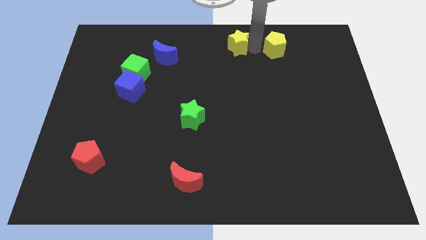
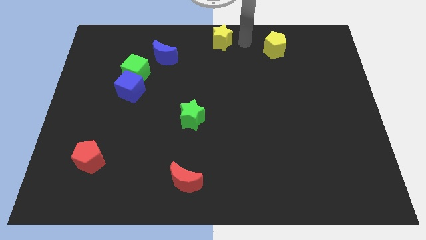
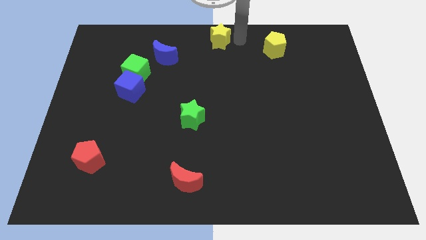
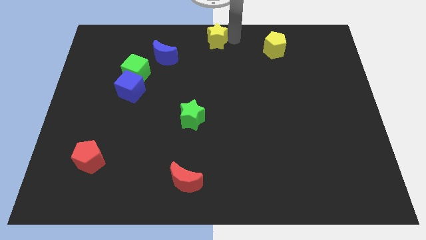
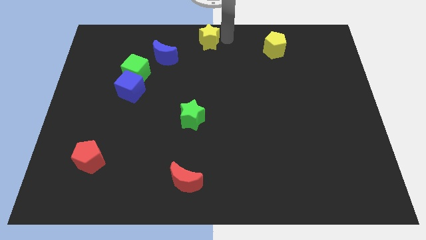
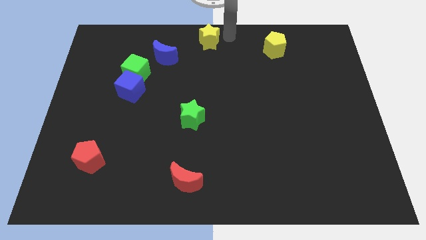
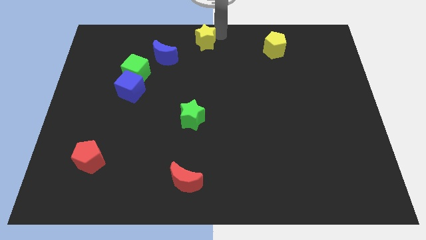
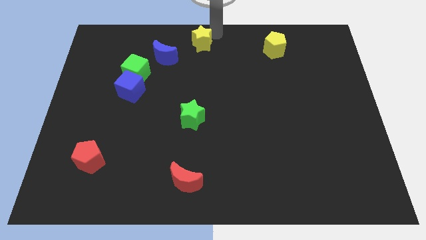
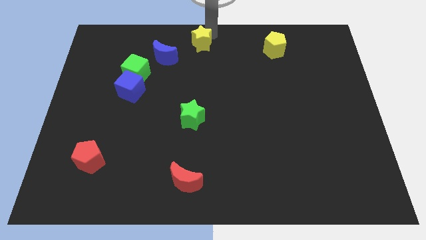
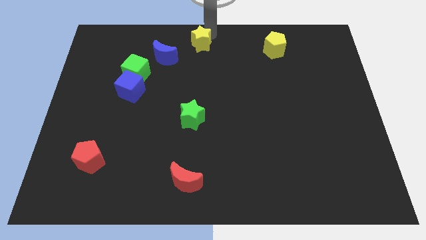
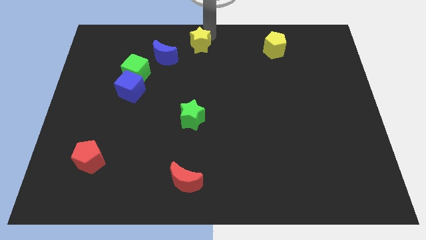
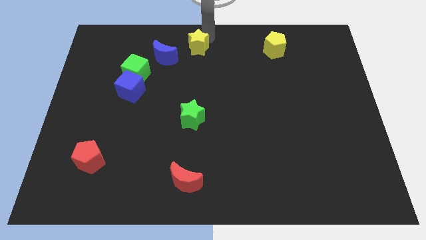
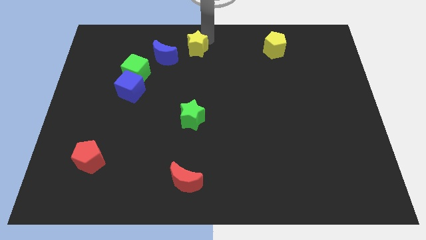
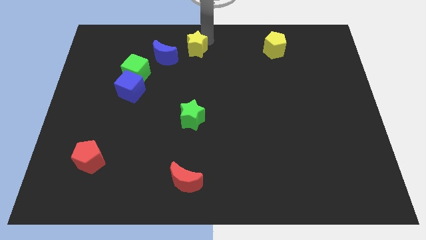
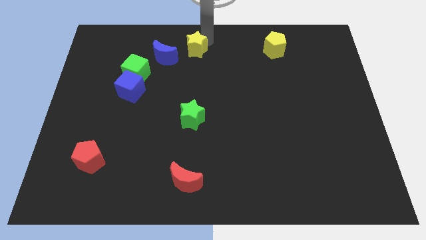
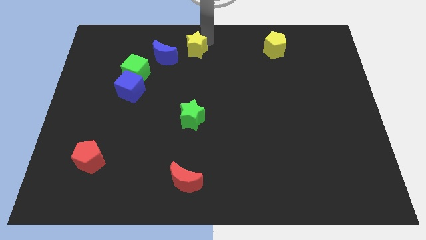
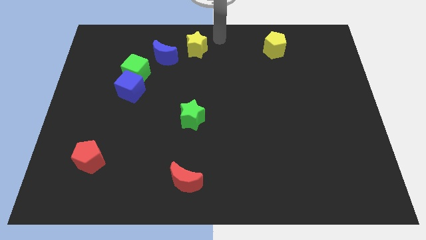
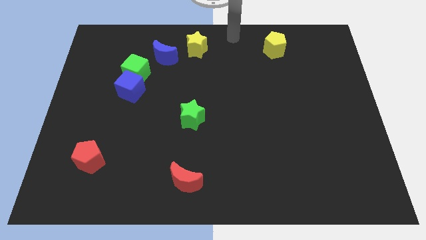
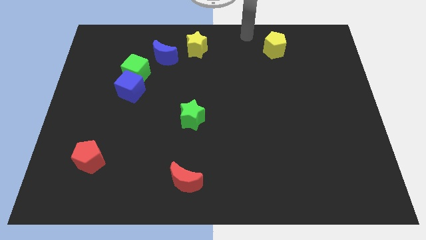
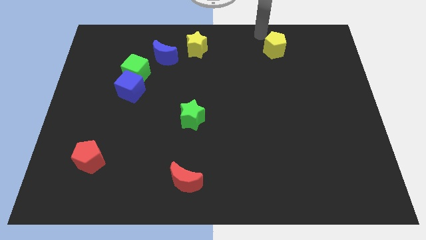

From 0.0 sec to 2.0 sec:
put the yellow star vertically above the green star

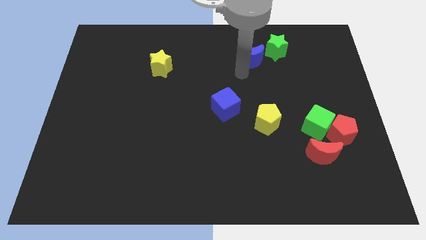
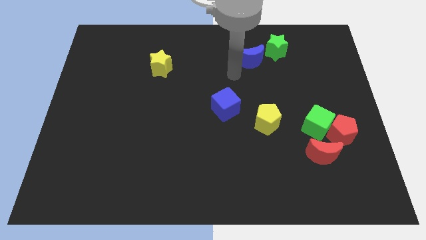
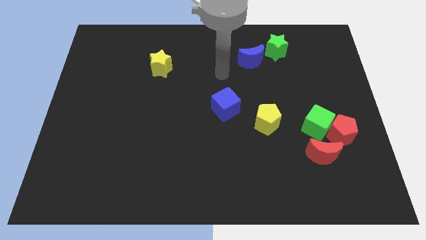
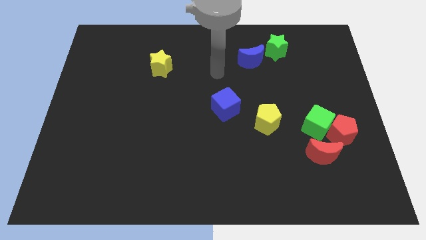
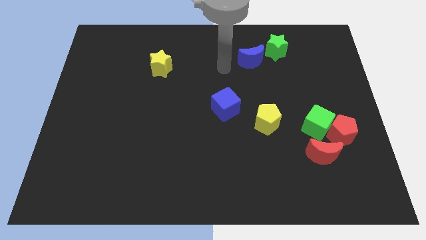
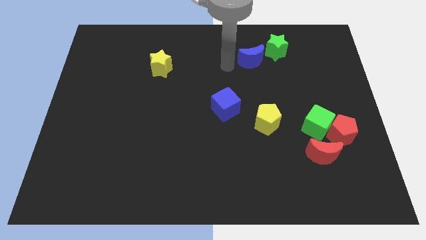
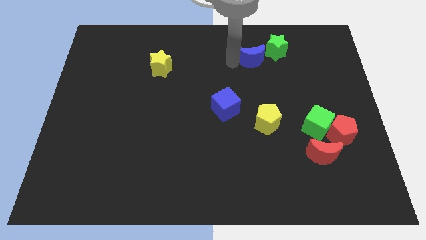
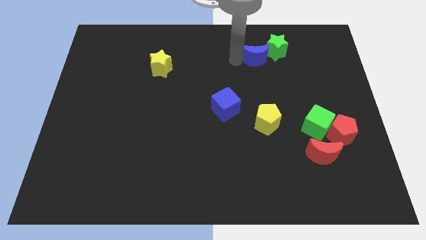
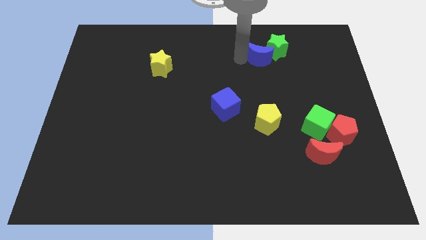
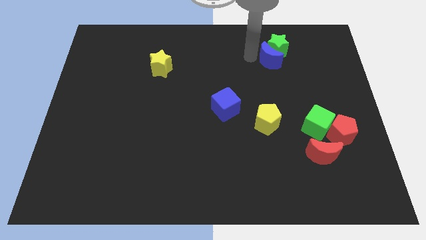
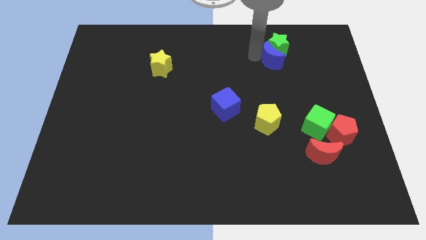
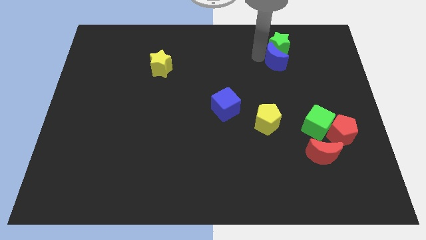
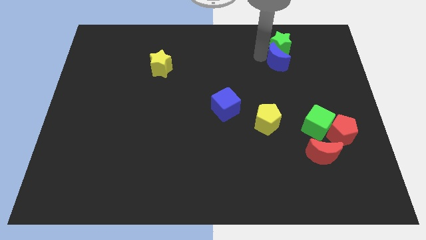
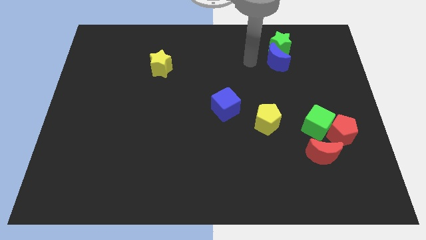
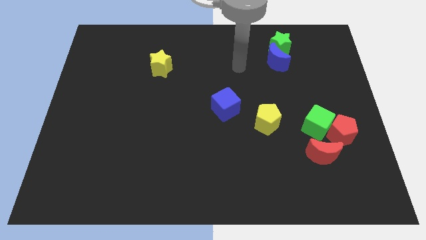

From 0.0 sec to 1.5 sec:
push the blue moon into the green star

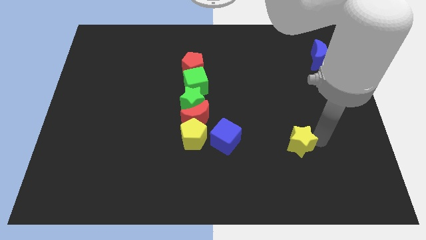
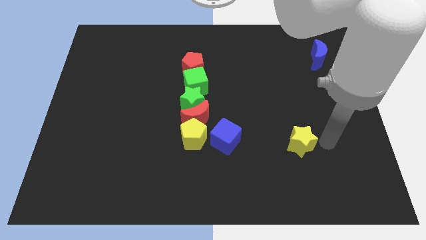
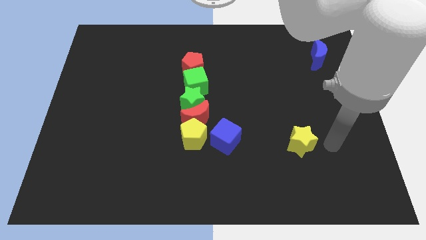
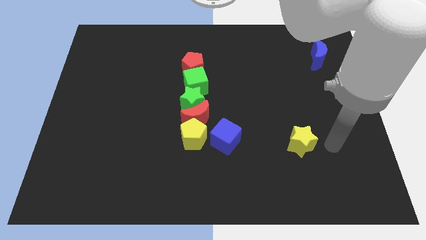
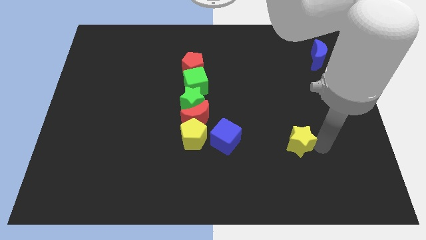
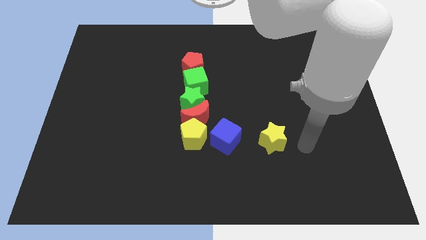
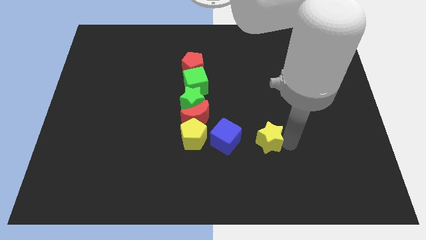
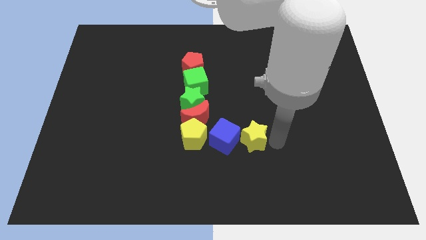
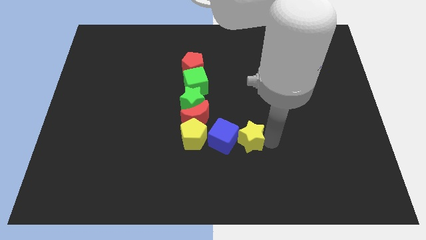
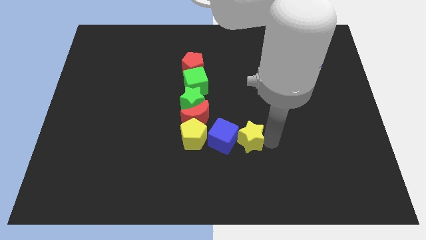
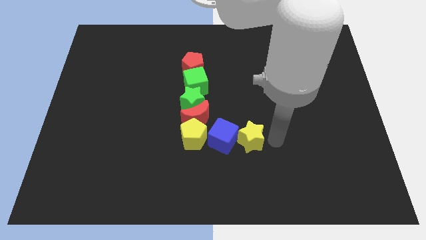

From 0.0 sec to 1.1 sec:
push the yellow star into the blue cube

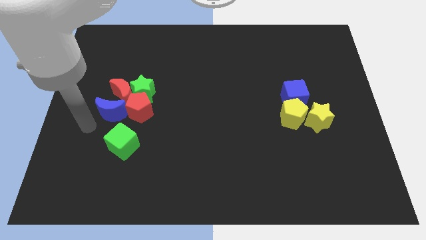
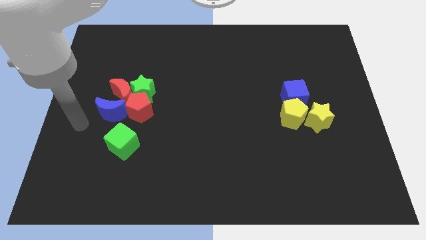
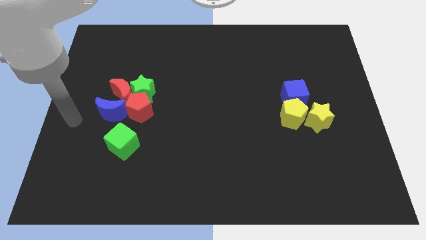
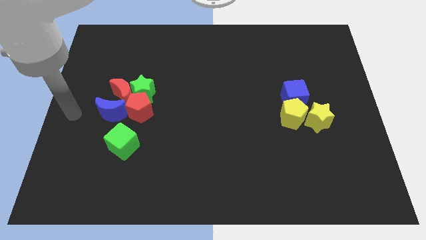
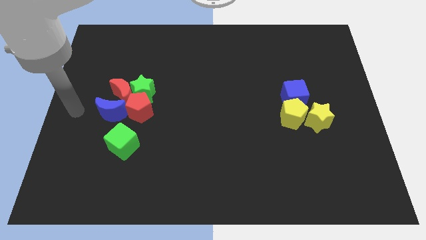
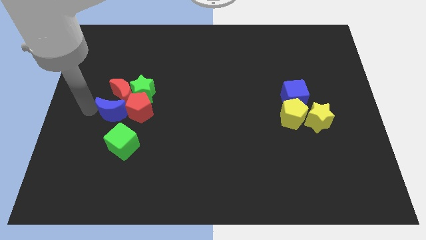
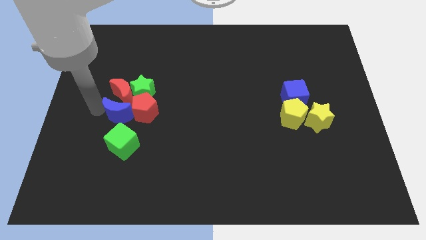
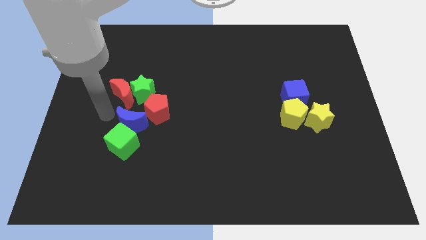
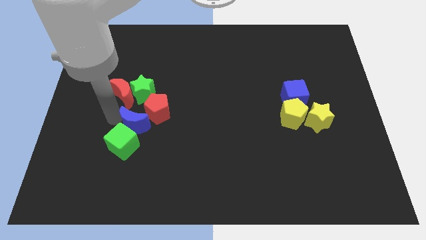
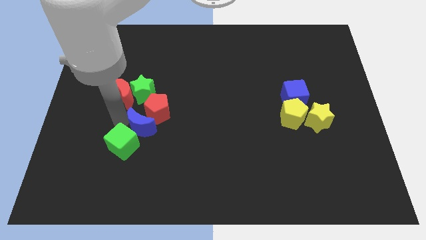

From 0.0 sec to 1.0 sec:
push the red pentagon with a blue moon

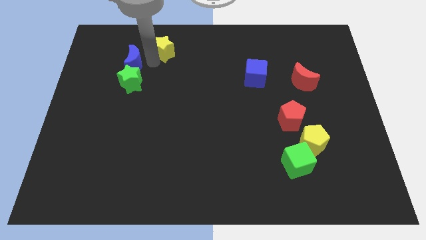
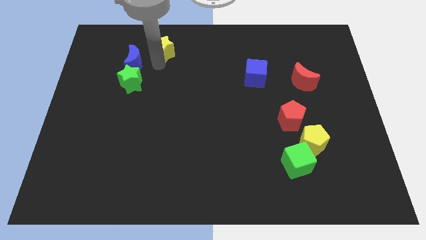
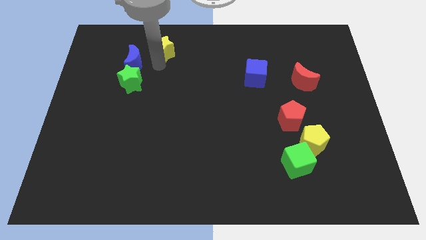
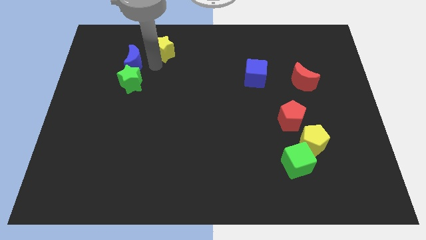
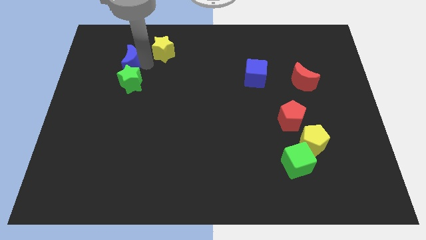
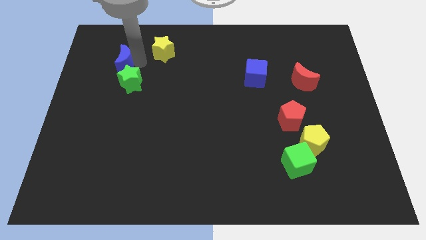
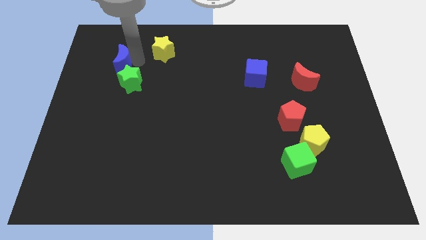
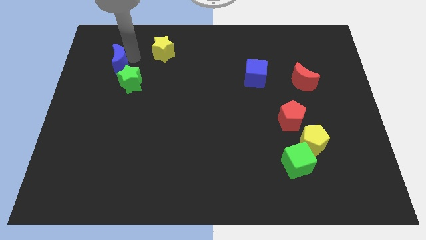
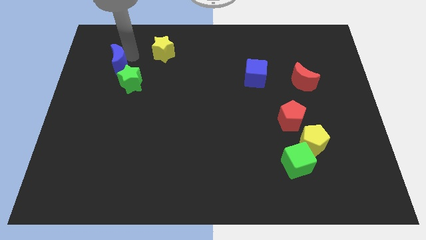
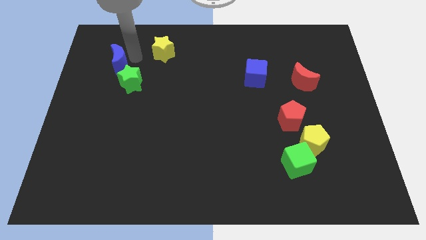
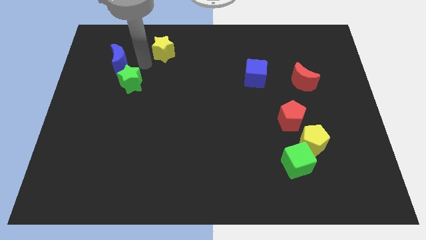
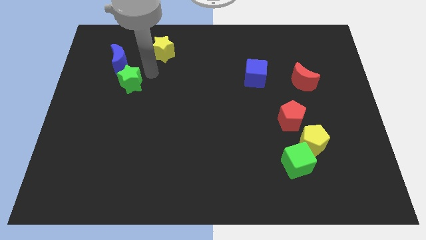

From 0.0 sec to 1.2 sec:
move blue moon towards its left

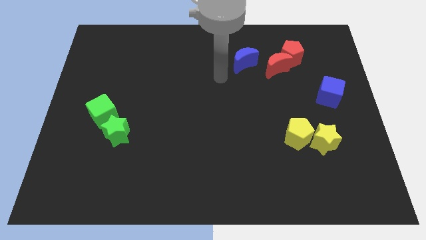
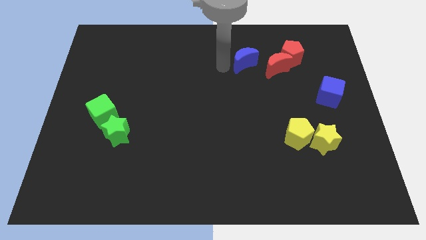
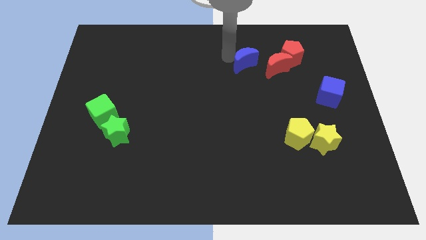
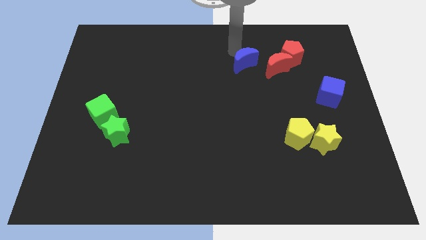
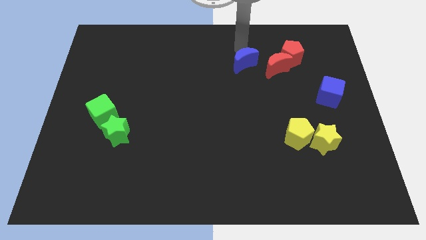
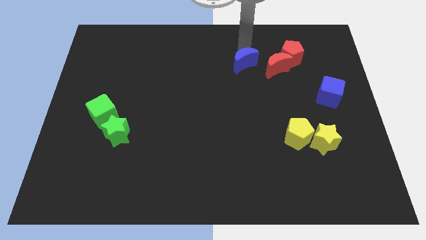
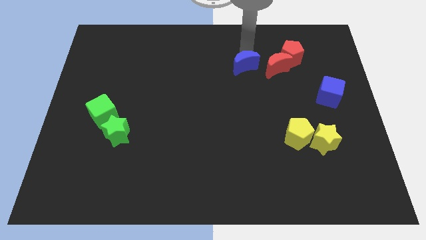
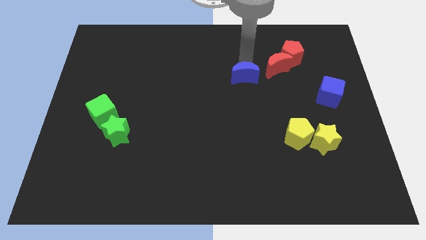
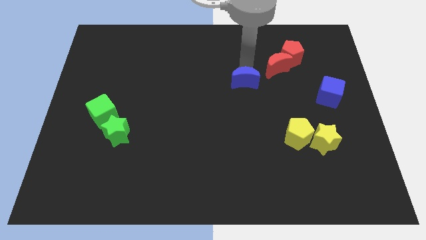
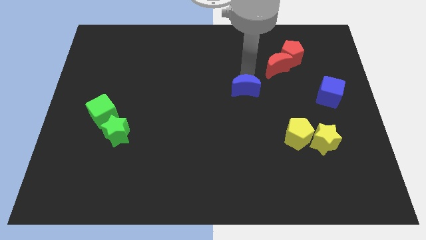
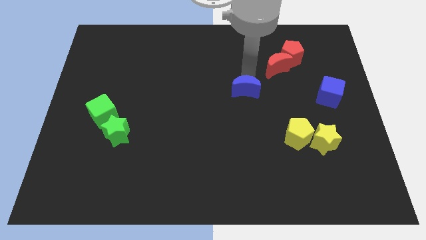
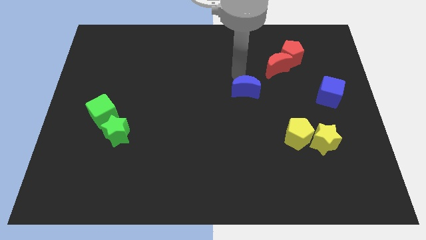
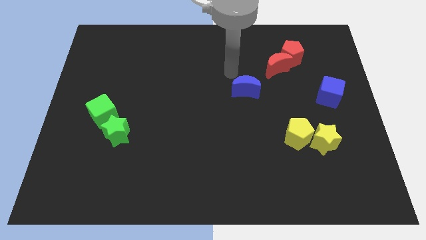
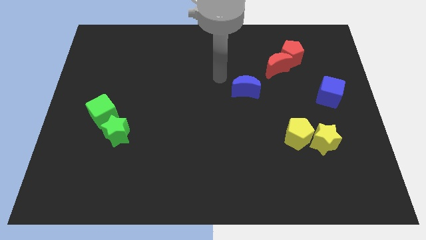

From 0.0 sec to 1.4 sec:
move the blue crescent downwards

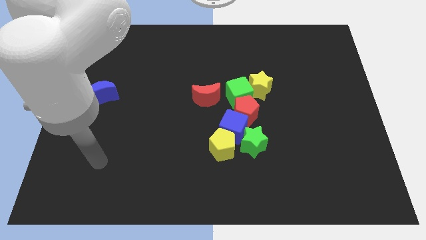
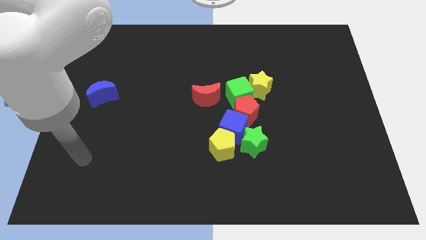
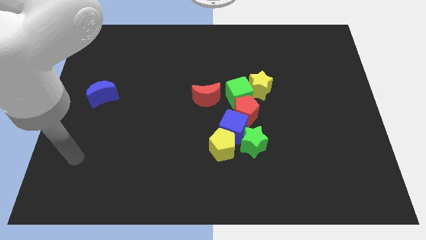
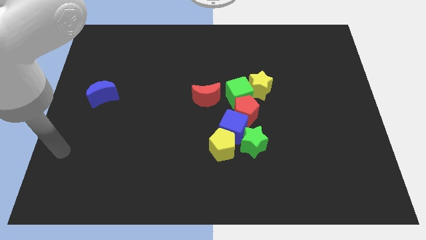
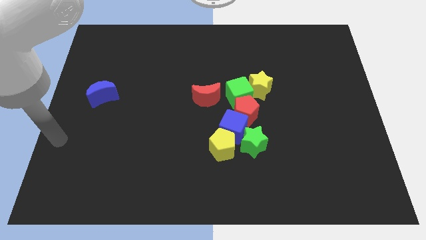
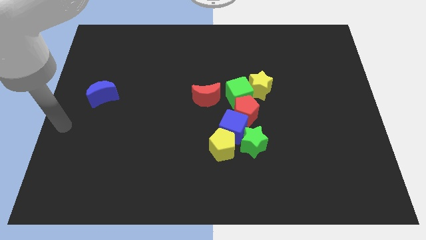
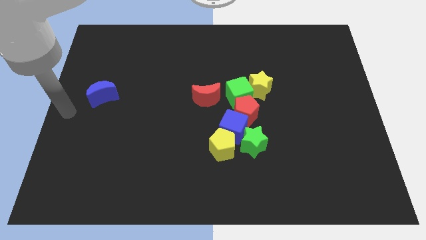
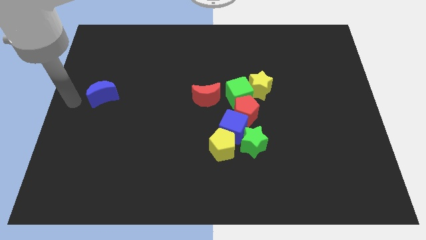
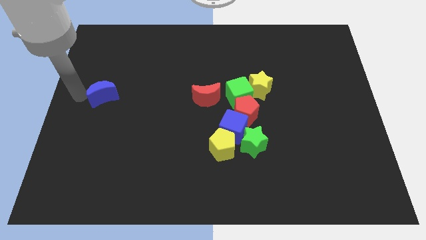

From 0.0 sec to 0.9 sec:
place your arm towards the left side of blue crescent
